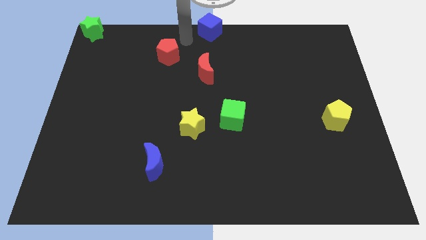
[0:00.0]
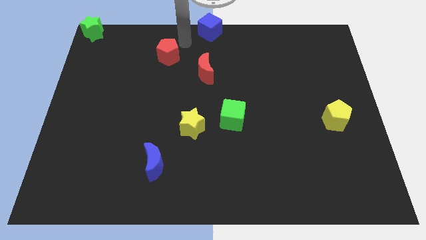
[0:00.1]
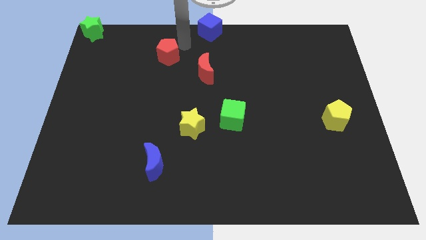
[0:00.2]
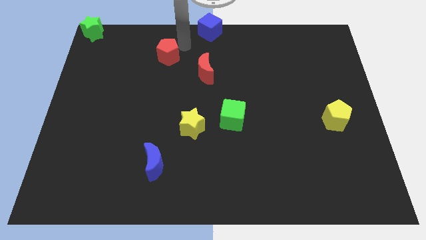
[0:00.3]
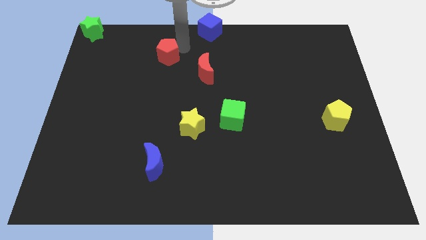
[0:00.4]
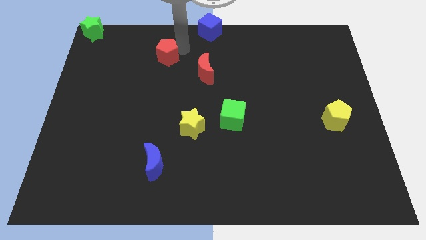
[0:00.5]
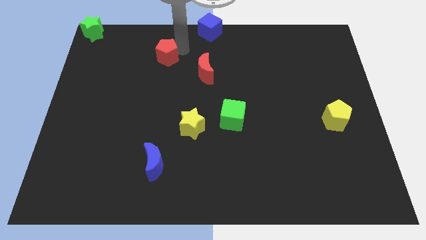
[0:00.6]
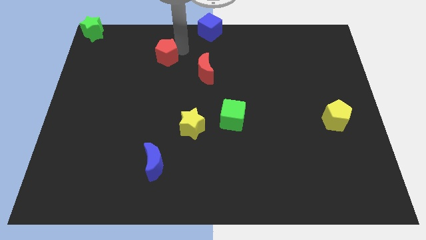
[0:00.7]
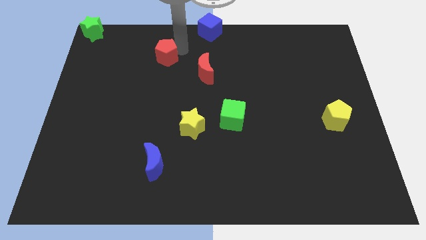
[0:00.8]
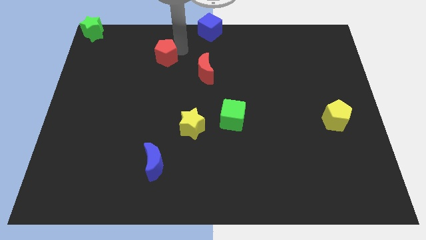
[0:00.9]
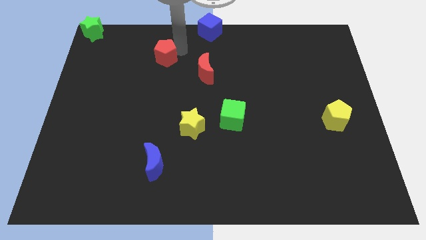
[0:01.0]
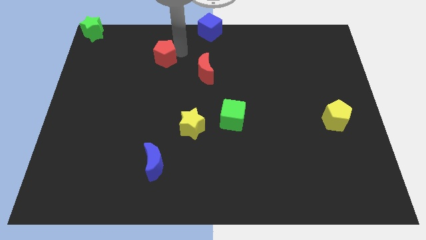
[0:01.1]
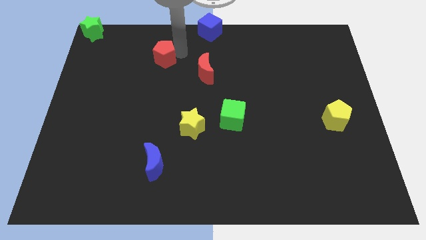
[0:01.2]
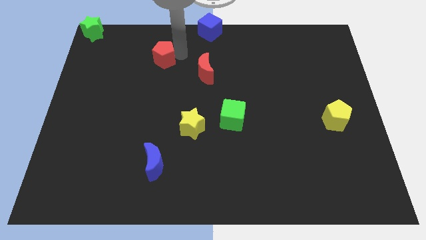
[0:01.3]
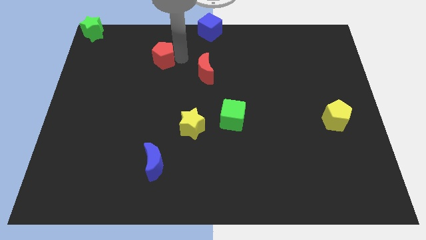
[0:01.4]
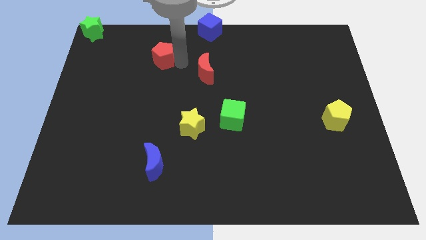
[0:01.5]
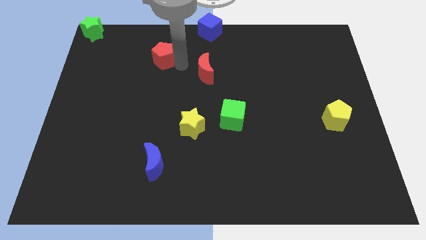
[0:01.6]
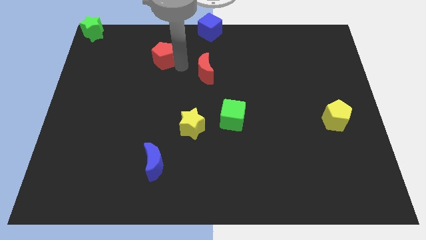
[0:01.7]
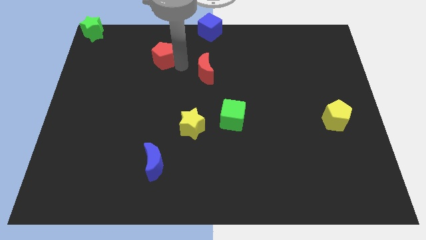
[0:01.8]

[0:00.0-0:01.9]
move red pentagon slightly down

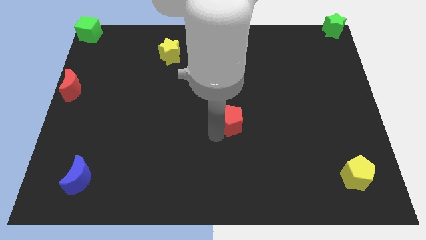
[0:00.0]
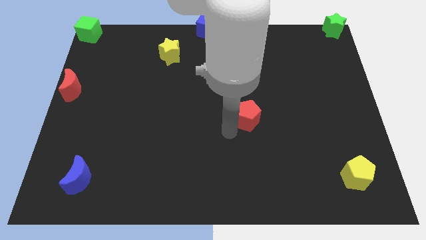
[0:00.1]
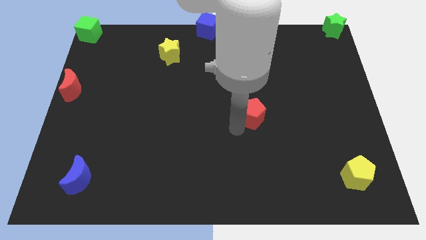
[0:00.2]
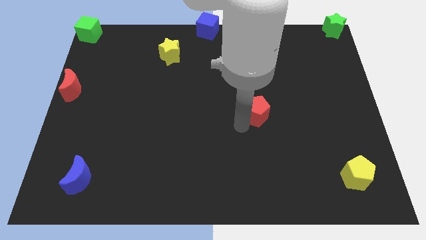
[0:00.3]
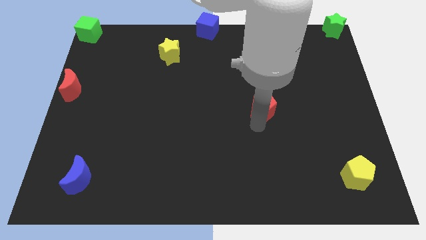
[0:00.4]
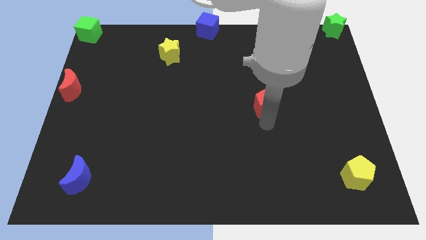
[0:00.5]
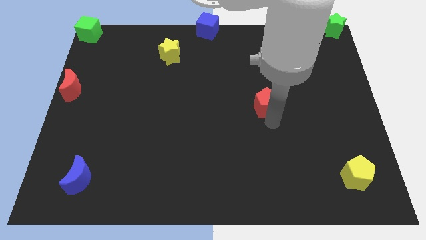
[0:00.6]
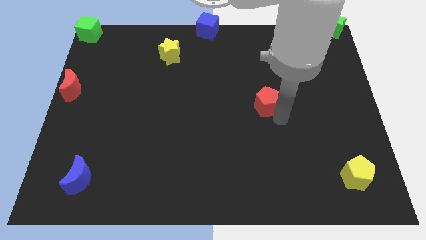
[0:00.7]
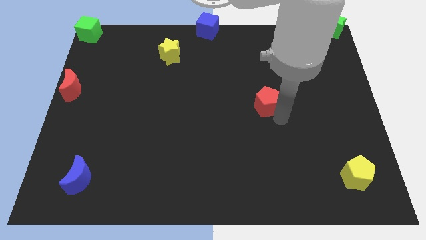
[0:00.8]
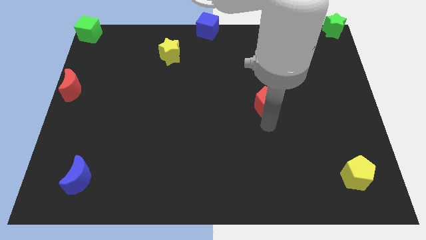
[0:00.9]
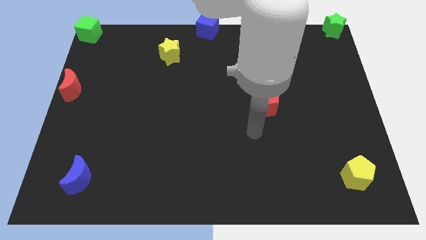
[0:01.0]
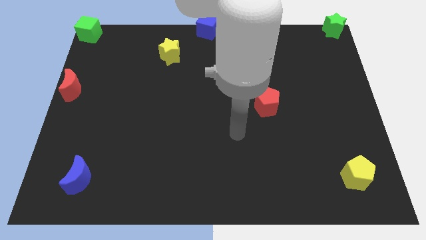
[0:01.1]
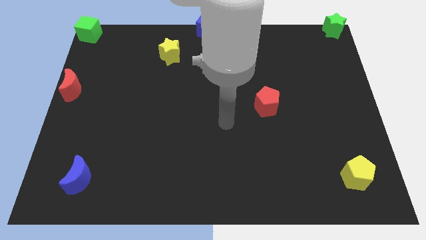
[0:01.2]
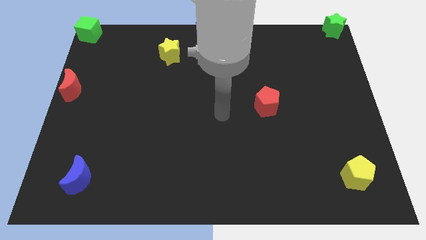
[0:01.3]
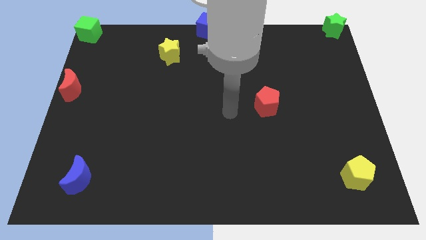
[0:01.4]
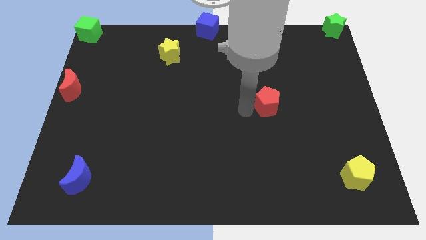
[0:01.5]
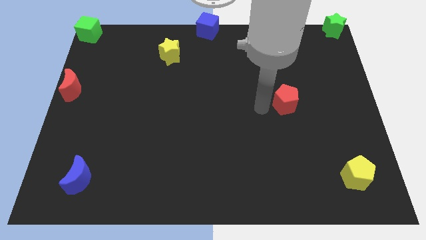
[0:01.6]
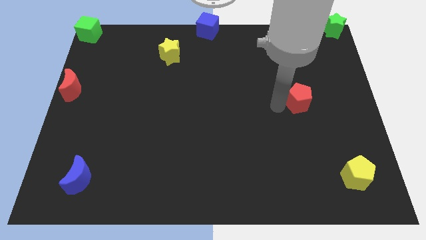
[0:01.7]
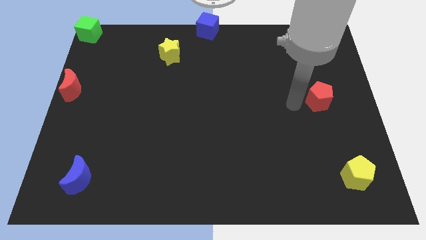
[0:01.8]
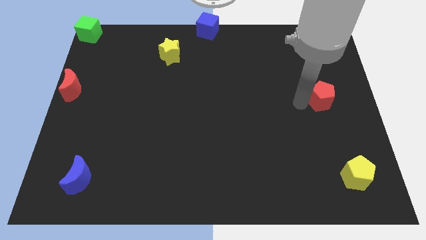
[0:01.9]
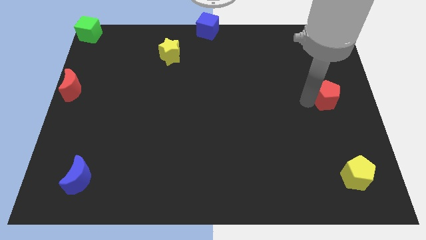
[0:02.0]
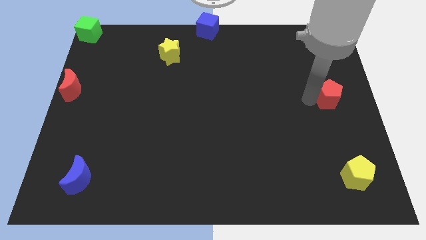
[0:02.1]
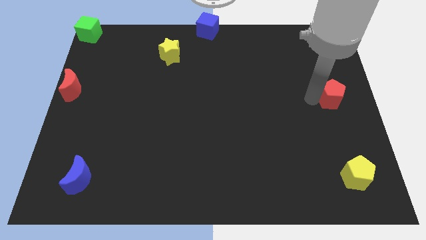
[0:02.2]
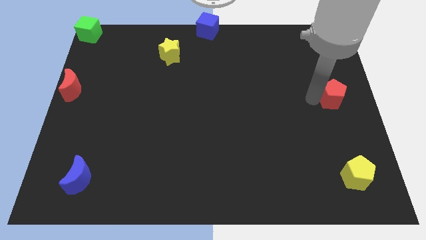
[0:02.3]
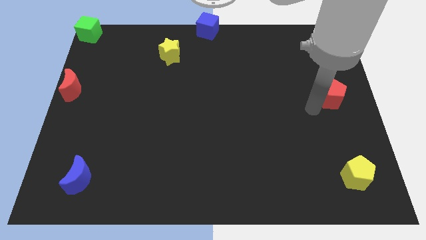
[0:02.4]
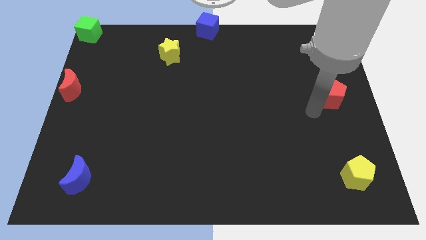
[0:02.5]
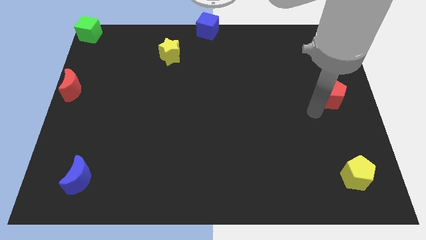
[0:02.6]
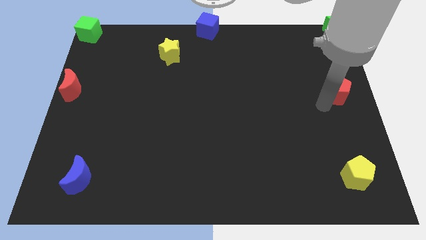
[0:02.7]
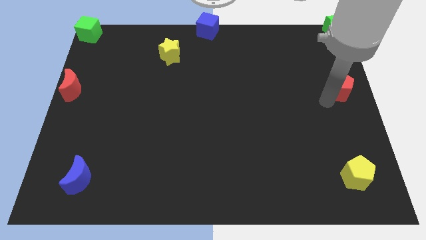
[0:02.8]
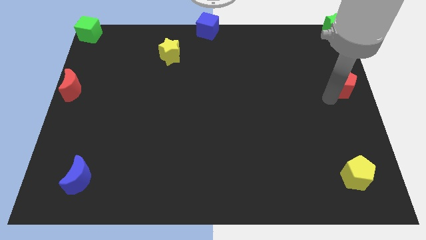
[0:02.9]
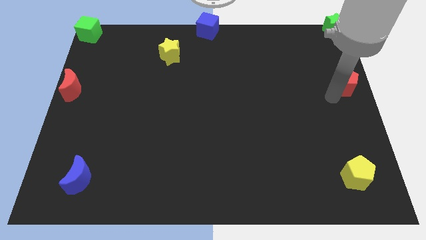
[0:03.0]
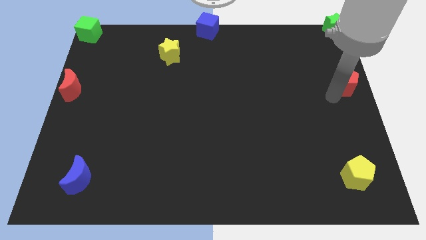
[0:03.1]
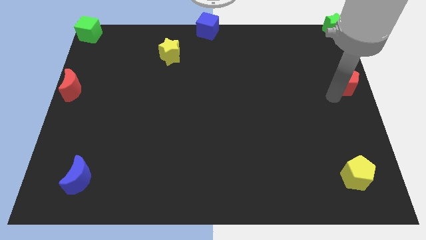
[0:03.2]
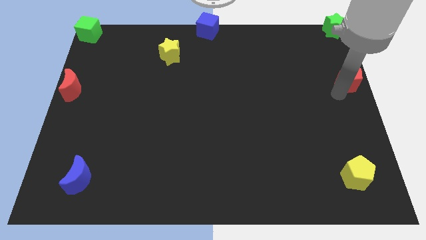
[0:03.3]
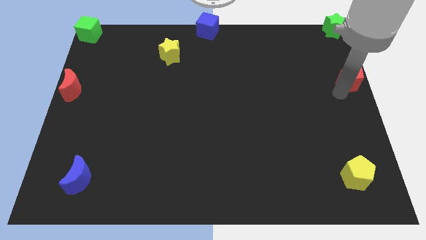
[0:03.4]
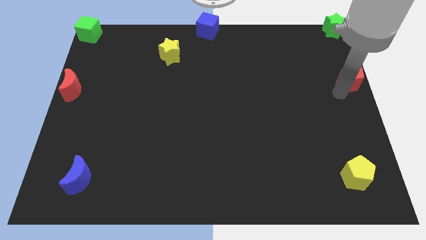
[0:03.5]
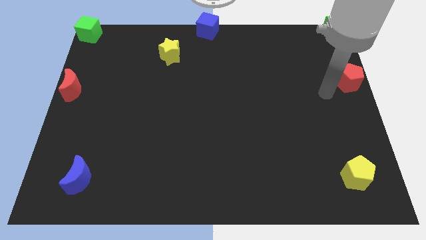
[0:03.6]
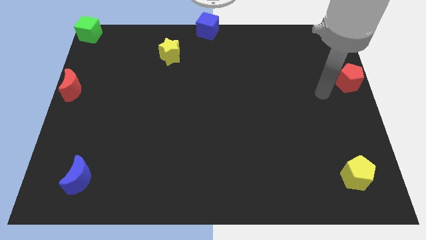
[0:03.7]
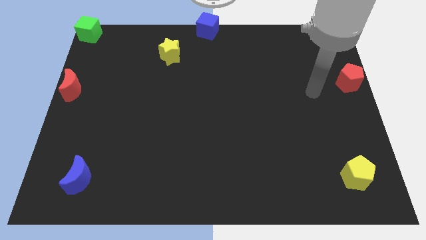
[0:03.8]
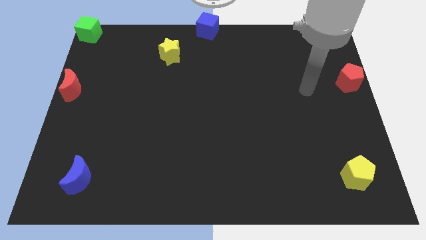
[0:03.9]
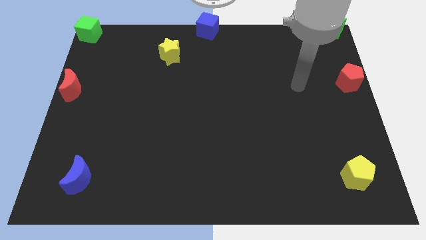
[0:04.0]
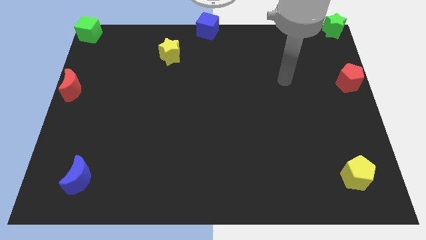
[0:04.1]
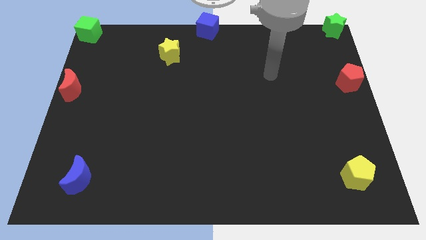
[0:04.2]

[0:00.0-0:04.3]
place the red pentagon vertically towards green star

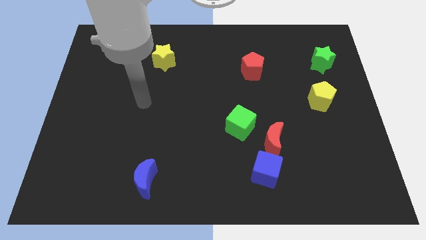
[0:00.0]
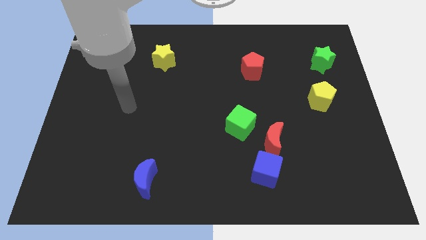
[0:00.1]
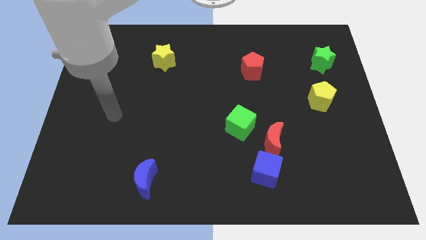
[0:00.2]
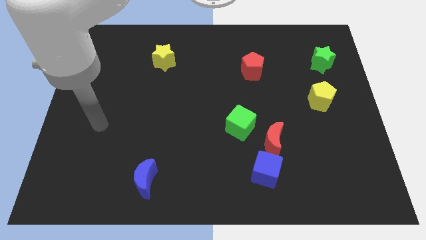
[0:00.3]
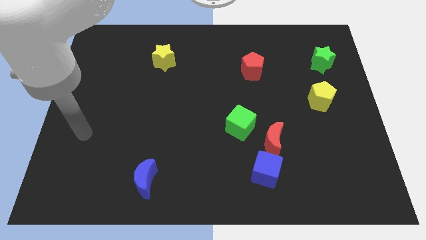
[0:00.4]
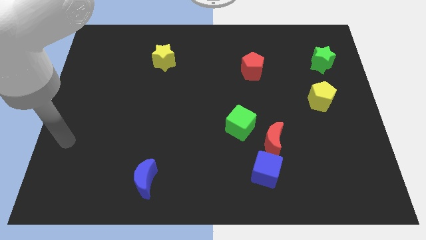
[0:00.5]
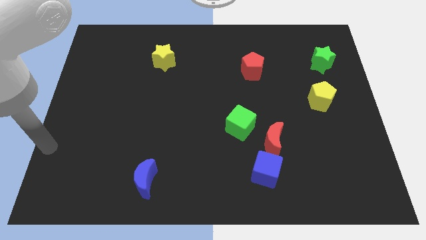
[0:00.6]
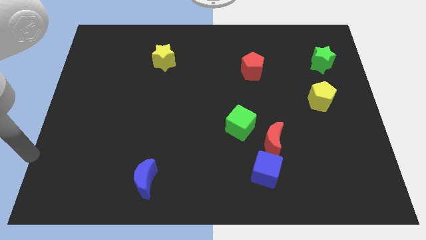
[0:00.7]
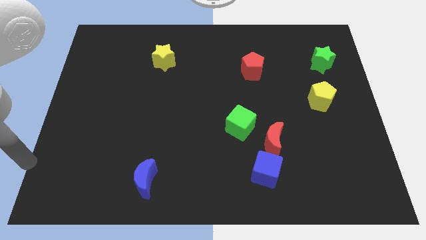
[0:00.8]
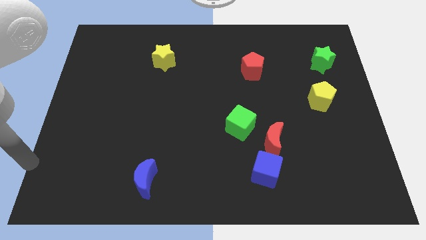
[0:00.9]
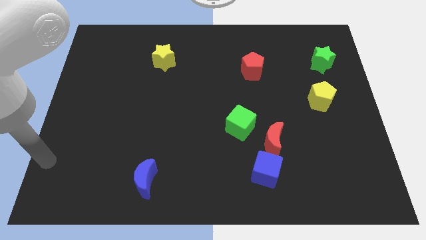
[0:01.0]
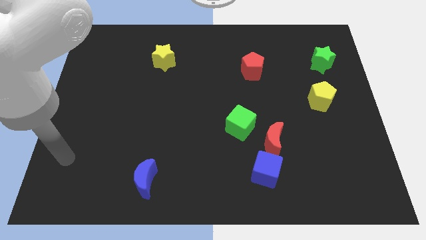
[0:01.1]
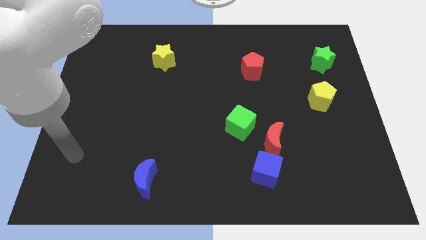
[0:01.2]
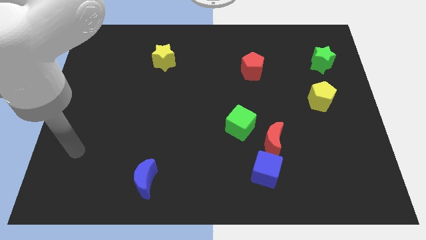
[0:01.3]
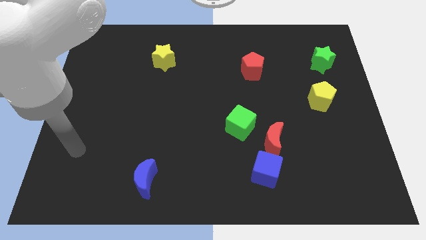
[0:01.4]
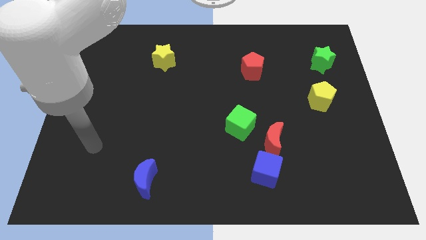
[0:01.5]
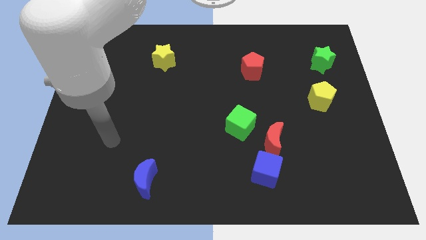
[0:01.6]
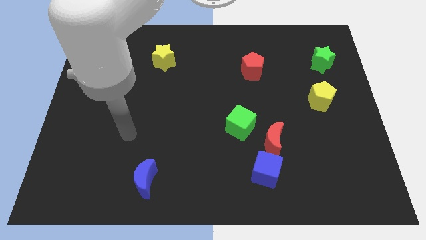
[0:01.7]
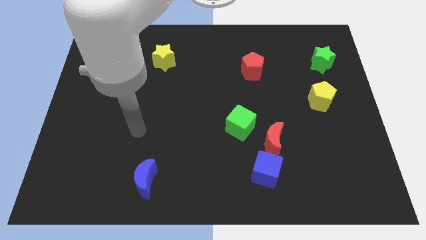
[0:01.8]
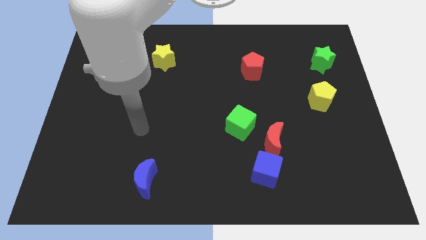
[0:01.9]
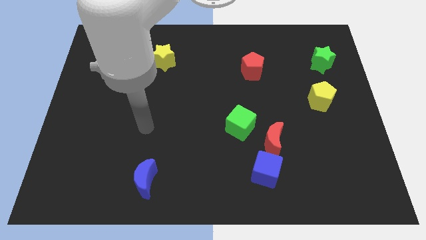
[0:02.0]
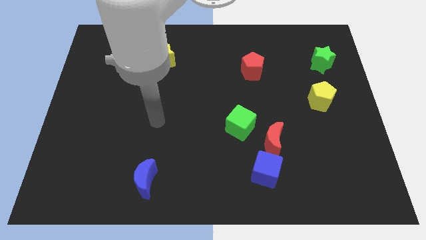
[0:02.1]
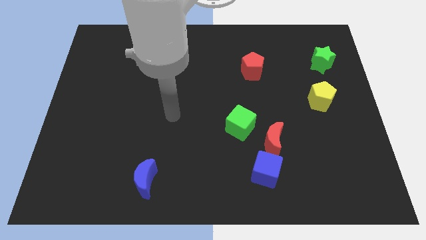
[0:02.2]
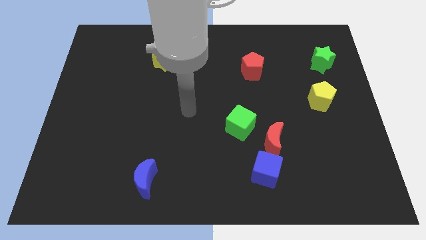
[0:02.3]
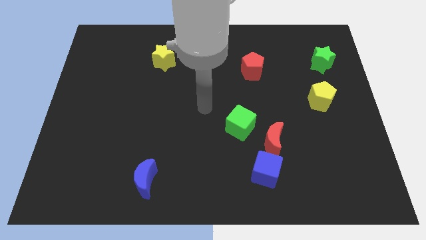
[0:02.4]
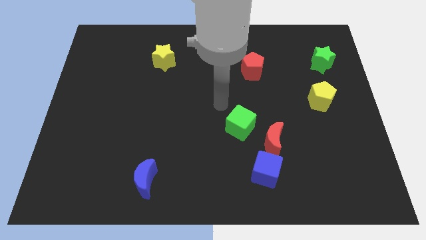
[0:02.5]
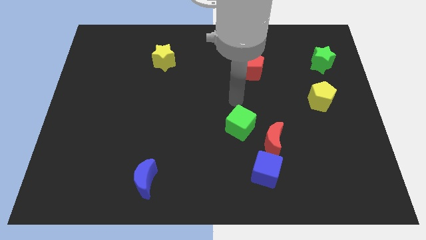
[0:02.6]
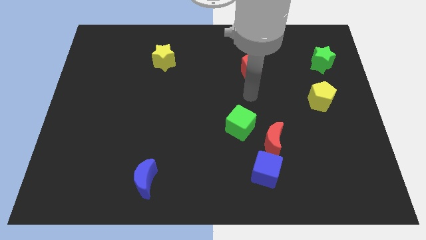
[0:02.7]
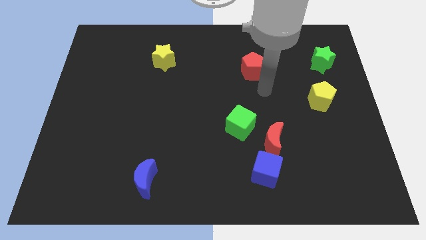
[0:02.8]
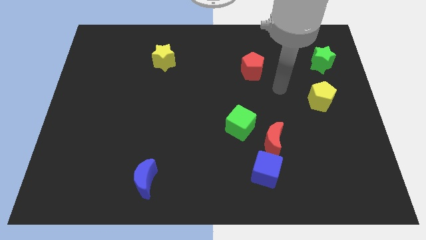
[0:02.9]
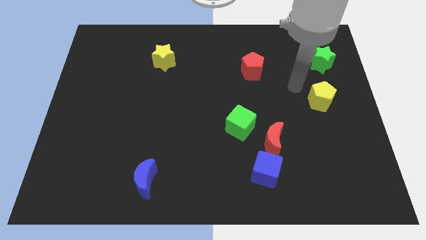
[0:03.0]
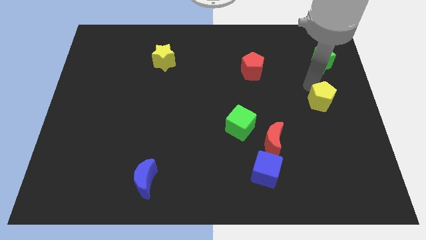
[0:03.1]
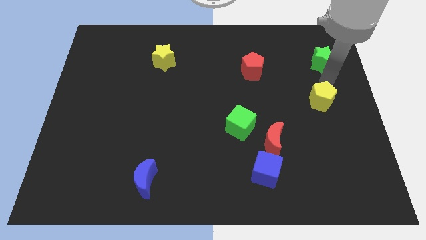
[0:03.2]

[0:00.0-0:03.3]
move your arm to the top of yellow pentagon
